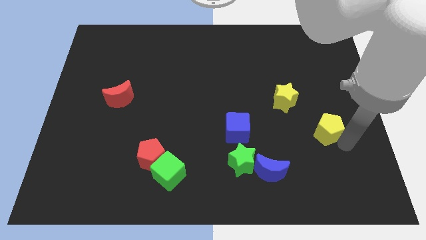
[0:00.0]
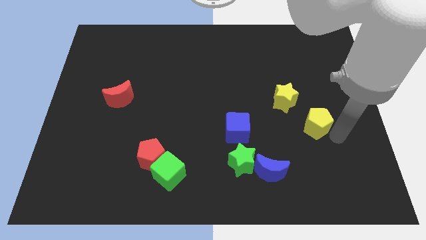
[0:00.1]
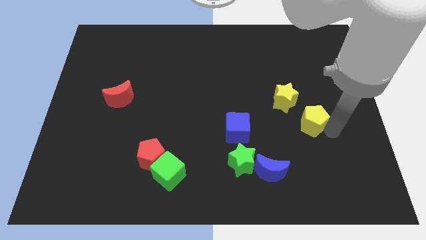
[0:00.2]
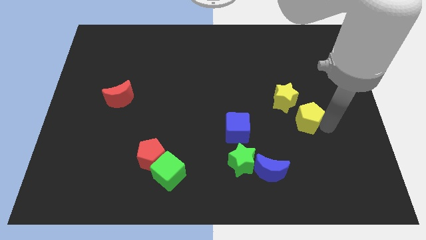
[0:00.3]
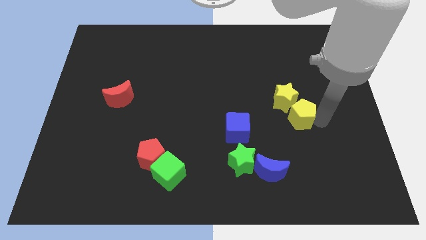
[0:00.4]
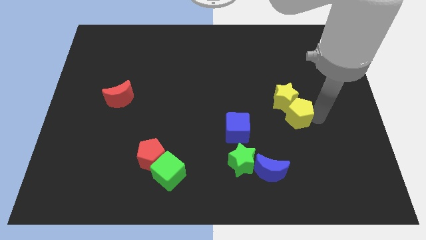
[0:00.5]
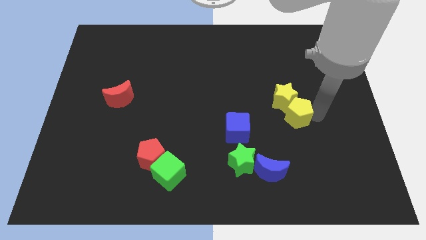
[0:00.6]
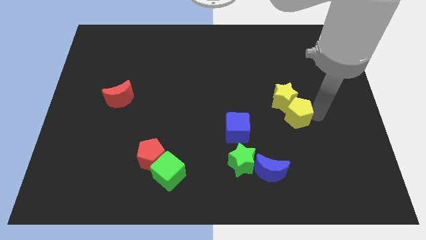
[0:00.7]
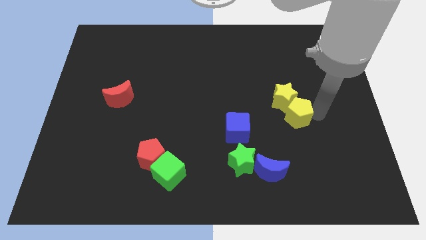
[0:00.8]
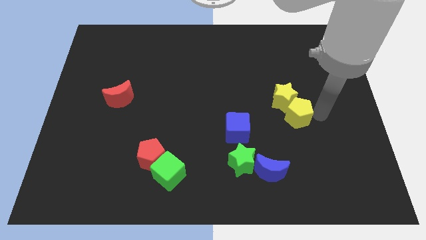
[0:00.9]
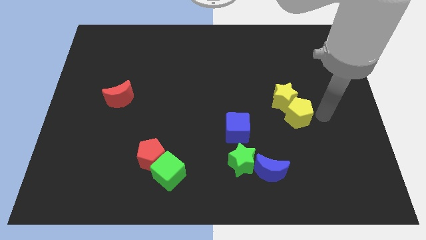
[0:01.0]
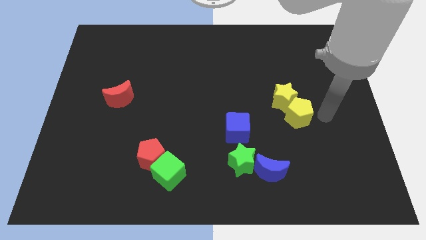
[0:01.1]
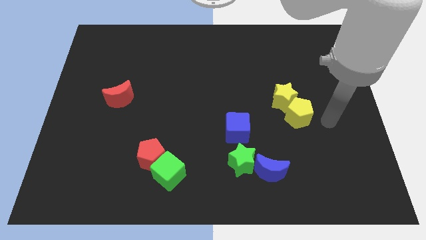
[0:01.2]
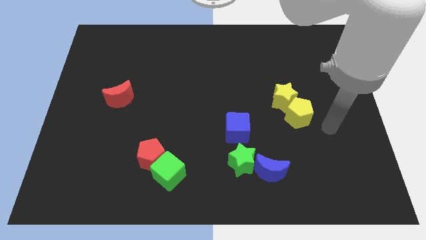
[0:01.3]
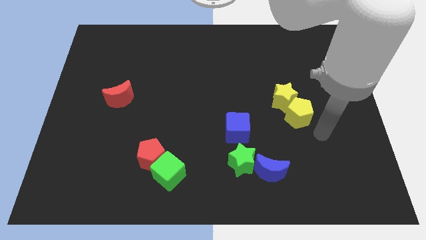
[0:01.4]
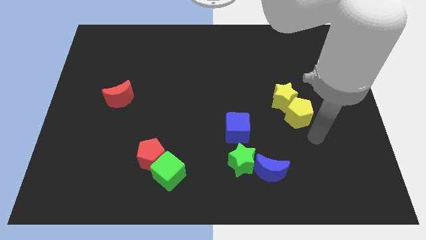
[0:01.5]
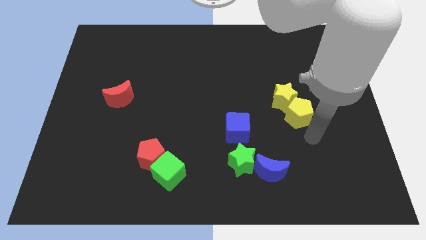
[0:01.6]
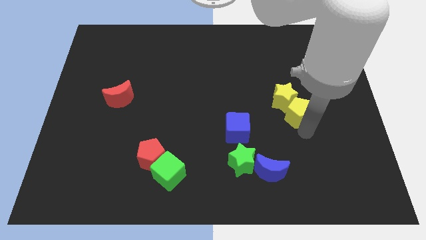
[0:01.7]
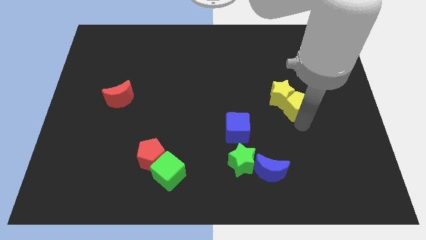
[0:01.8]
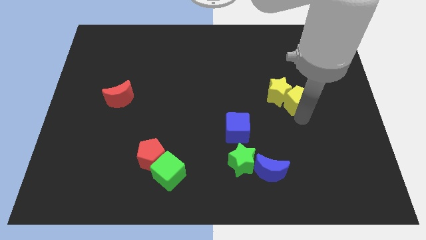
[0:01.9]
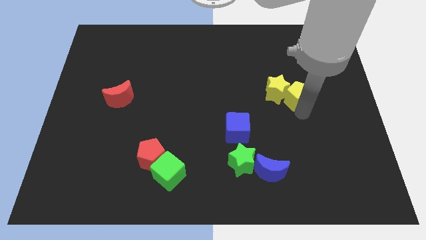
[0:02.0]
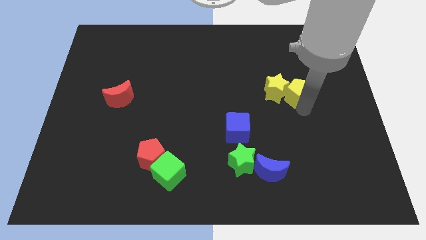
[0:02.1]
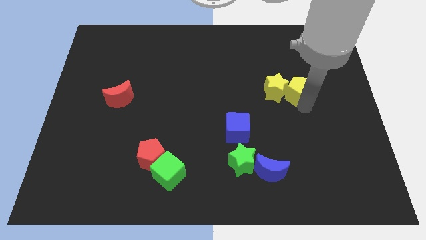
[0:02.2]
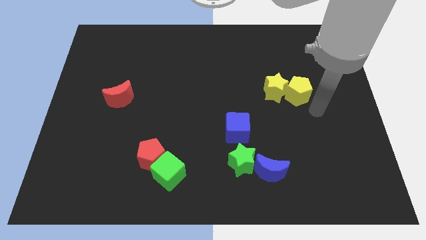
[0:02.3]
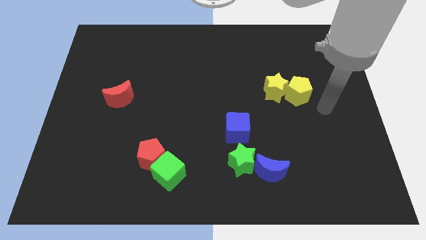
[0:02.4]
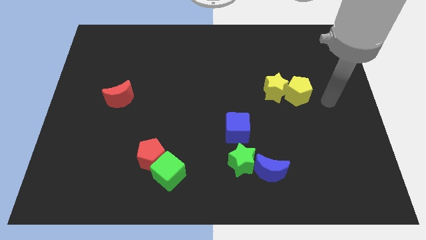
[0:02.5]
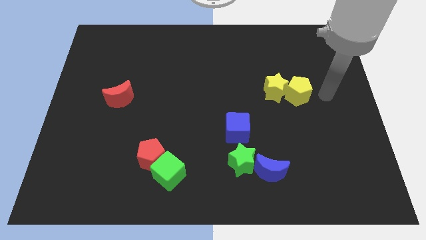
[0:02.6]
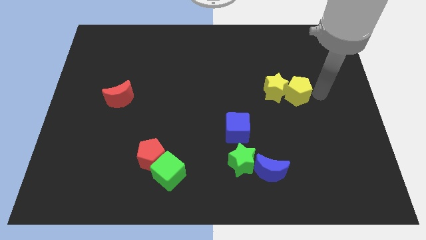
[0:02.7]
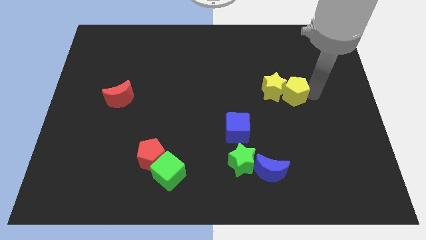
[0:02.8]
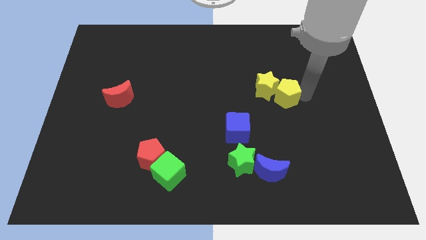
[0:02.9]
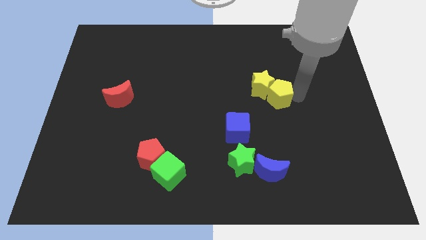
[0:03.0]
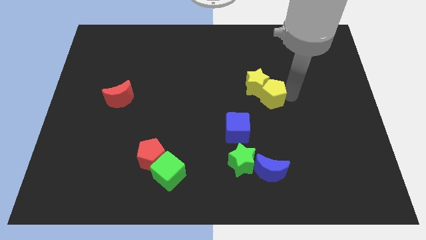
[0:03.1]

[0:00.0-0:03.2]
slide yellow pentagon into yellow star

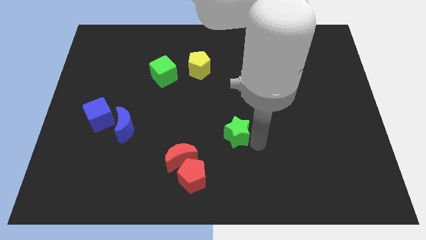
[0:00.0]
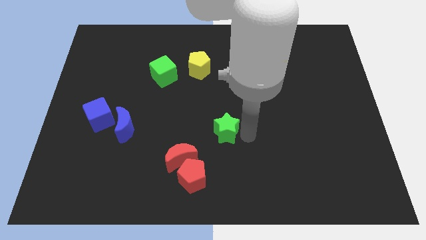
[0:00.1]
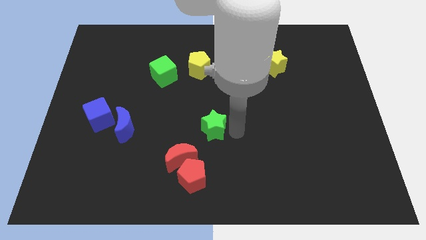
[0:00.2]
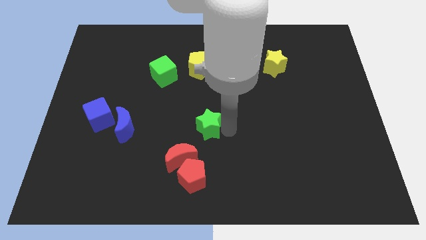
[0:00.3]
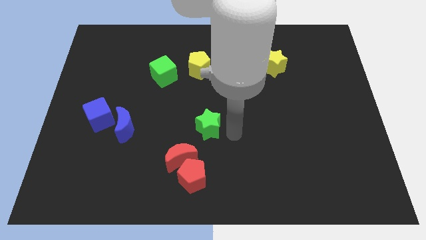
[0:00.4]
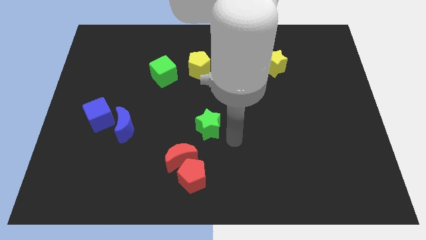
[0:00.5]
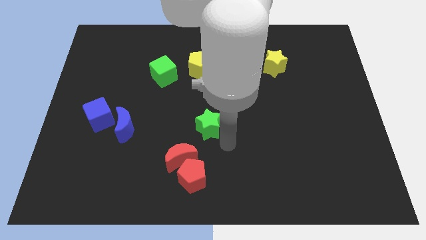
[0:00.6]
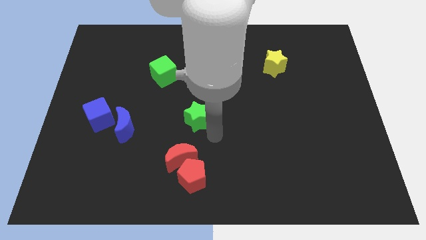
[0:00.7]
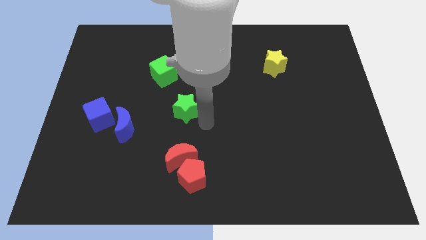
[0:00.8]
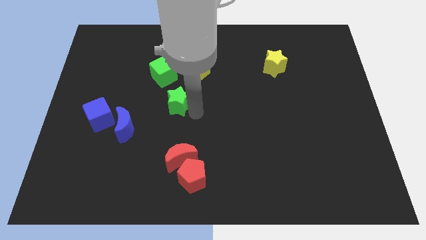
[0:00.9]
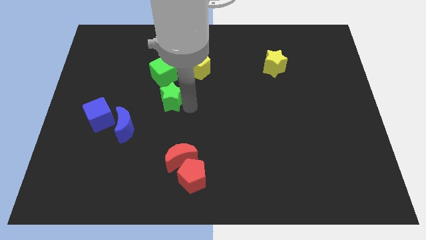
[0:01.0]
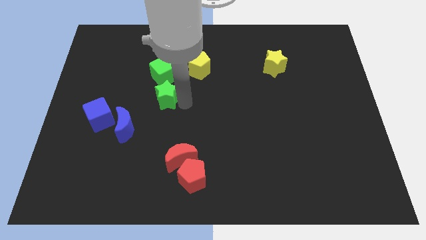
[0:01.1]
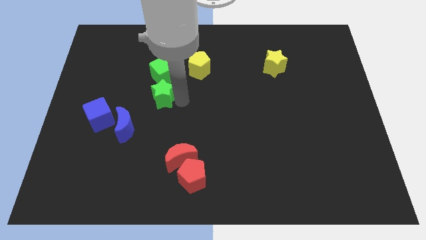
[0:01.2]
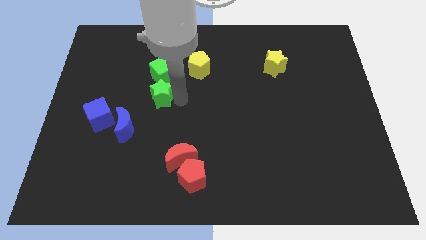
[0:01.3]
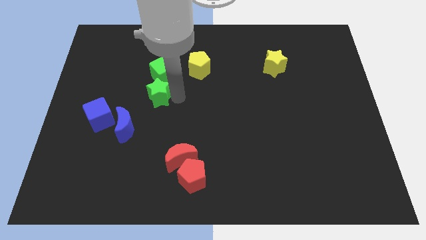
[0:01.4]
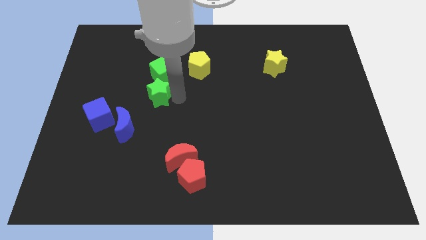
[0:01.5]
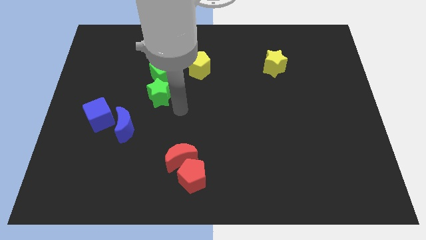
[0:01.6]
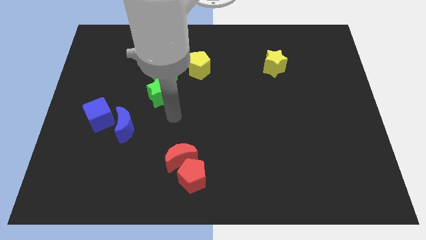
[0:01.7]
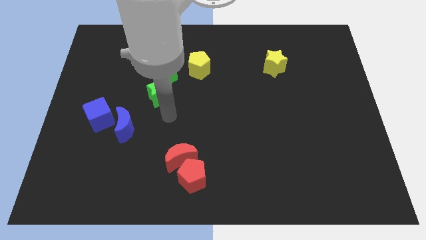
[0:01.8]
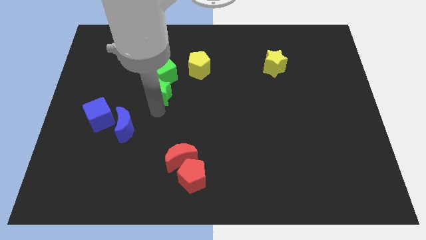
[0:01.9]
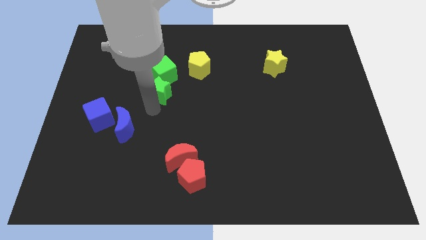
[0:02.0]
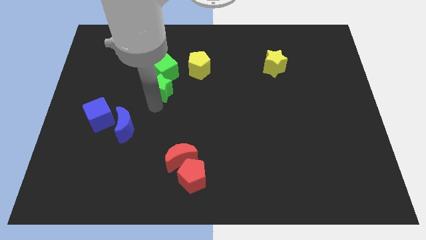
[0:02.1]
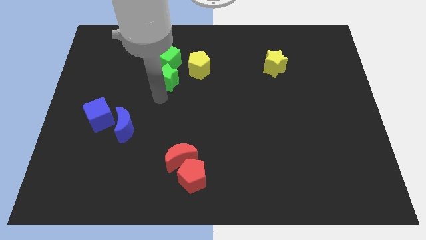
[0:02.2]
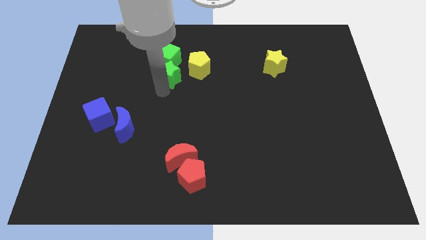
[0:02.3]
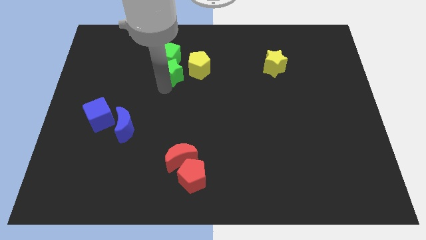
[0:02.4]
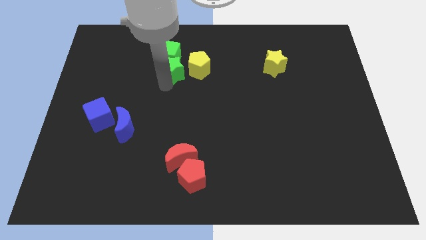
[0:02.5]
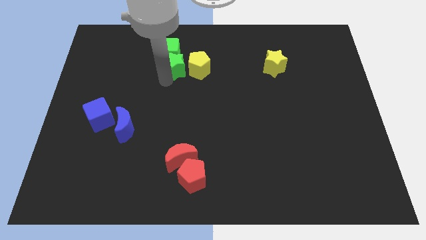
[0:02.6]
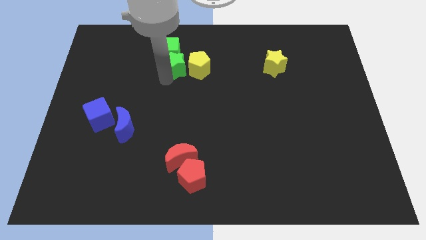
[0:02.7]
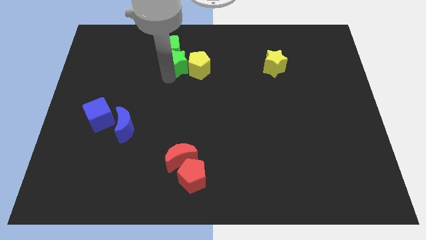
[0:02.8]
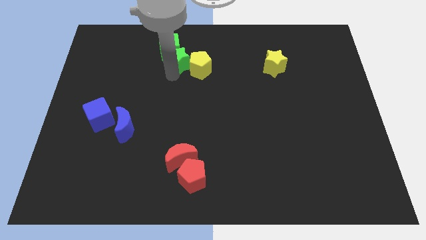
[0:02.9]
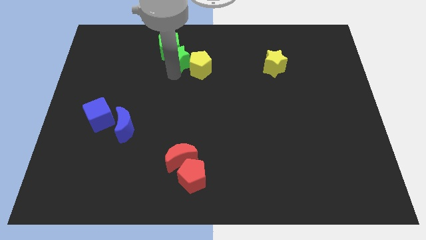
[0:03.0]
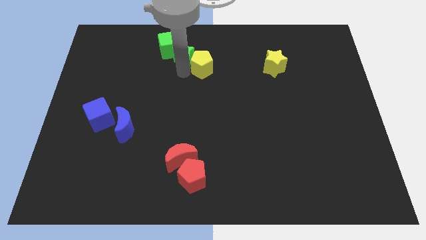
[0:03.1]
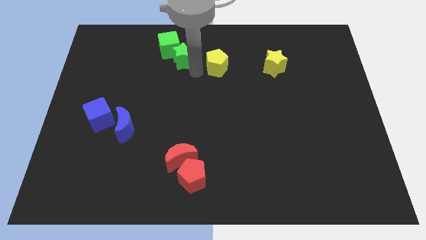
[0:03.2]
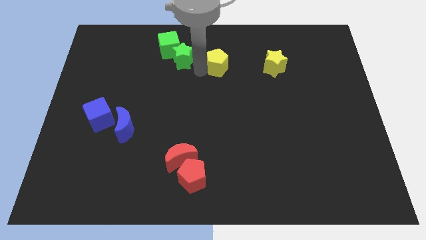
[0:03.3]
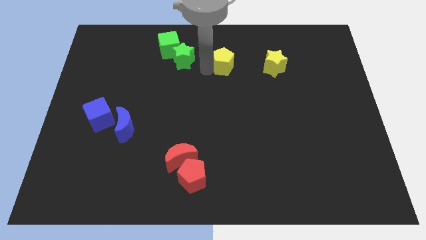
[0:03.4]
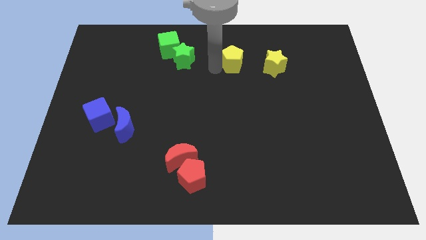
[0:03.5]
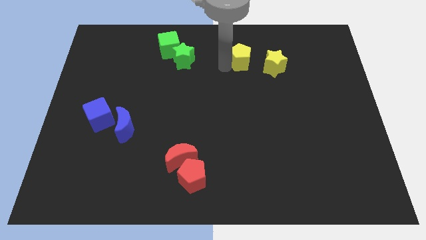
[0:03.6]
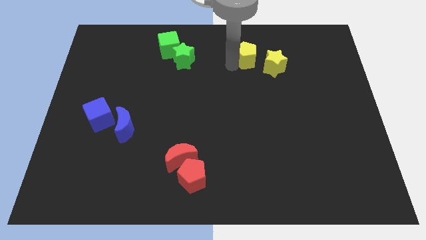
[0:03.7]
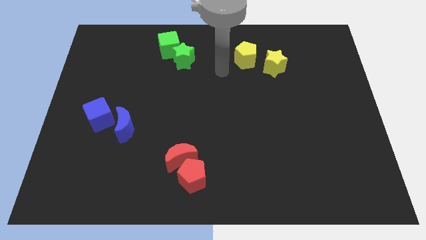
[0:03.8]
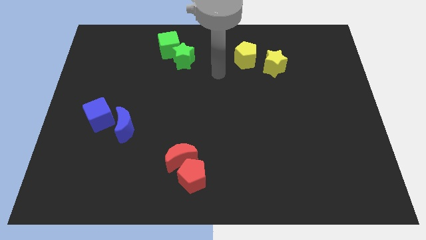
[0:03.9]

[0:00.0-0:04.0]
move the green star into green cube and yellow pentagon into beside yellow star

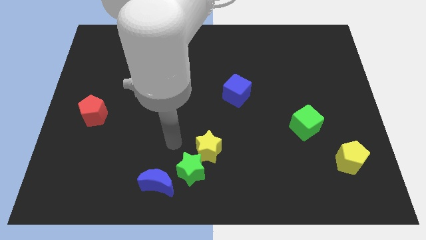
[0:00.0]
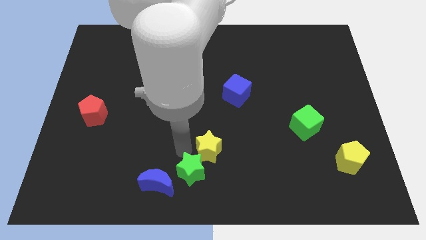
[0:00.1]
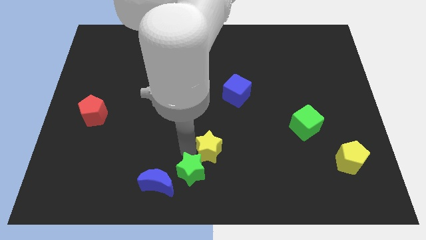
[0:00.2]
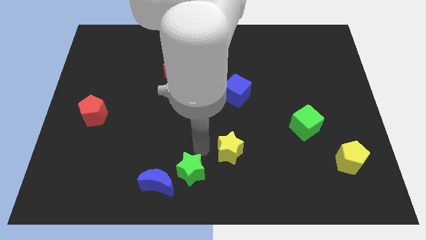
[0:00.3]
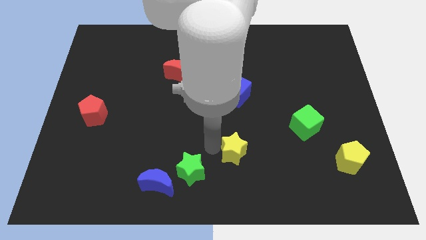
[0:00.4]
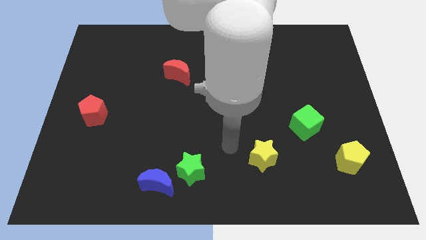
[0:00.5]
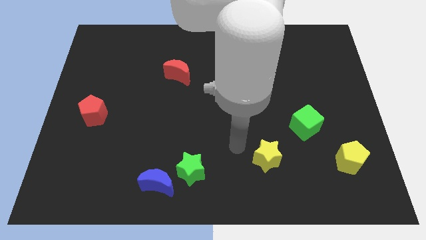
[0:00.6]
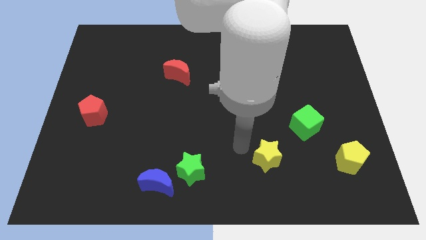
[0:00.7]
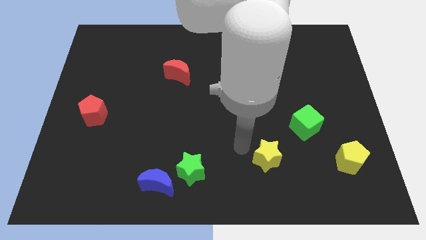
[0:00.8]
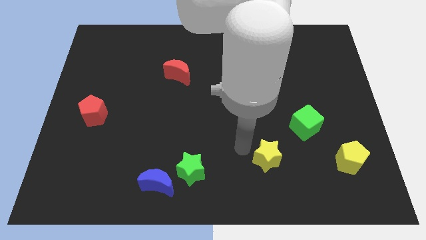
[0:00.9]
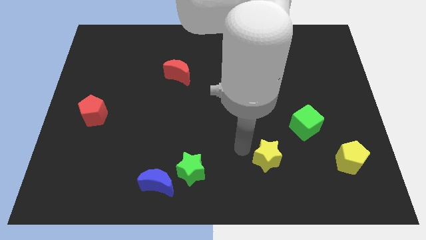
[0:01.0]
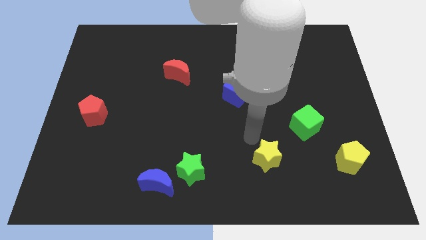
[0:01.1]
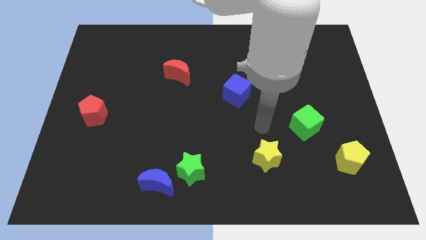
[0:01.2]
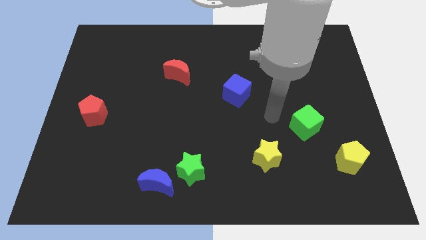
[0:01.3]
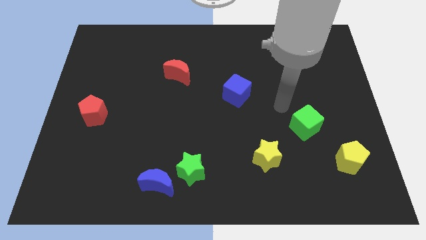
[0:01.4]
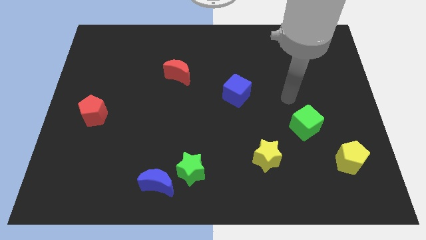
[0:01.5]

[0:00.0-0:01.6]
place the yellow star diagonally to the left of the yellow pentagon
